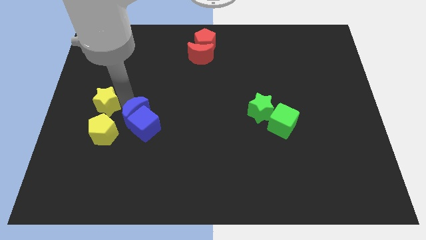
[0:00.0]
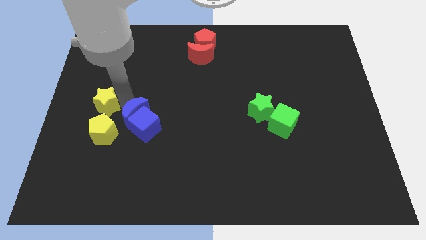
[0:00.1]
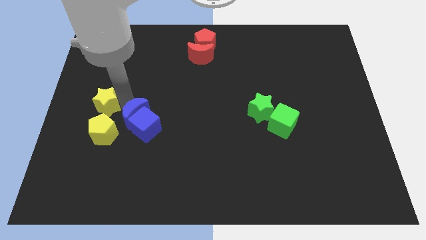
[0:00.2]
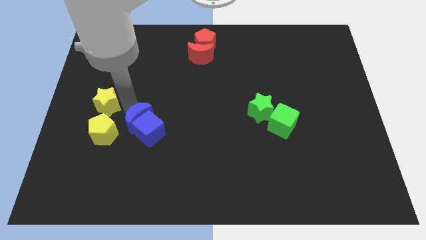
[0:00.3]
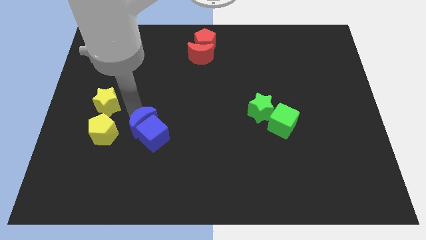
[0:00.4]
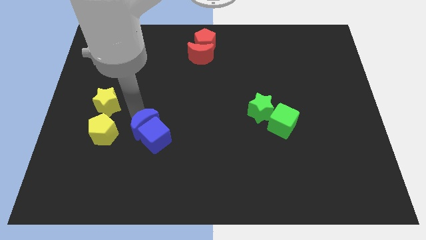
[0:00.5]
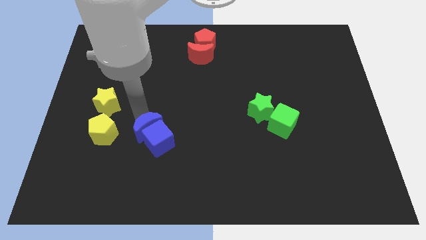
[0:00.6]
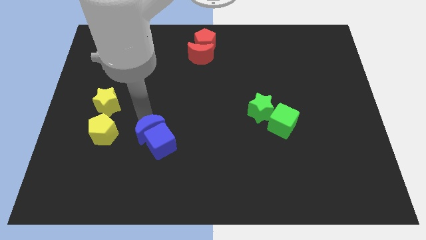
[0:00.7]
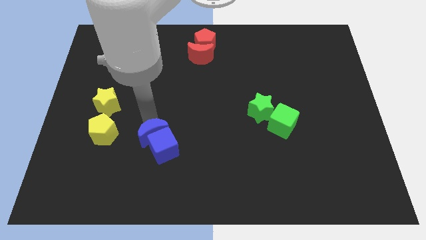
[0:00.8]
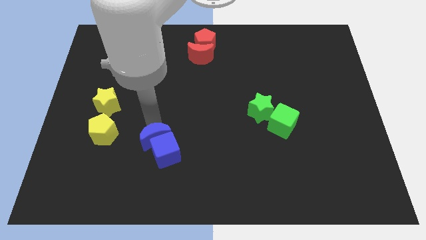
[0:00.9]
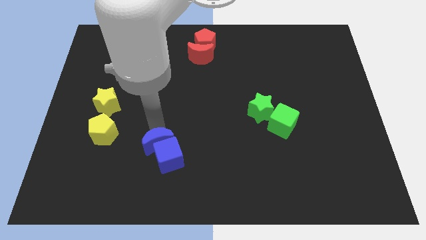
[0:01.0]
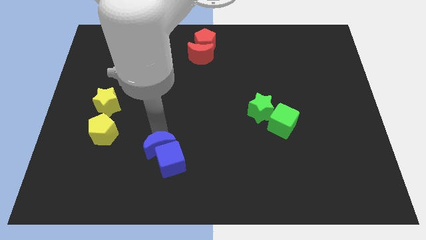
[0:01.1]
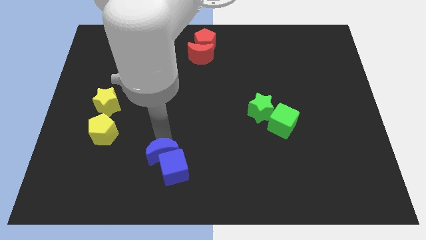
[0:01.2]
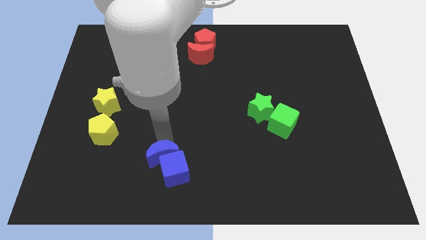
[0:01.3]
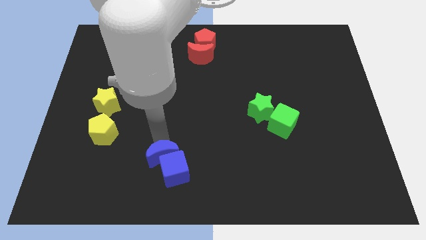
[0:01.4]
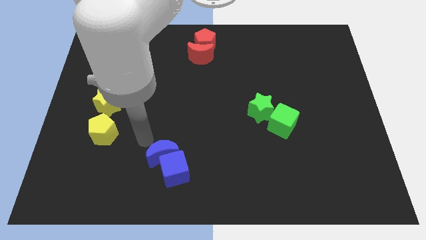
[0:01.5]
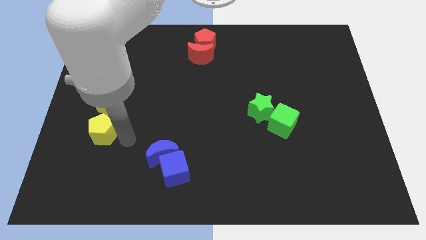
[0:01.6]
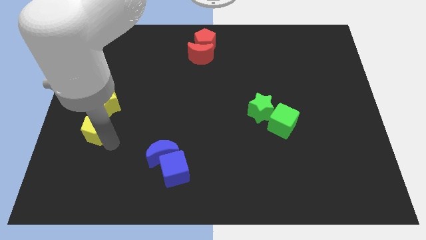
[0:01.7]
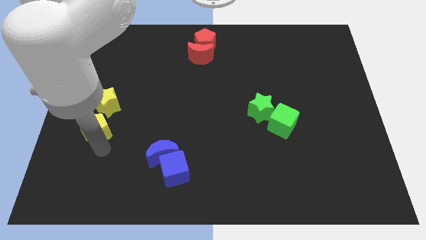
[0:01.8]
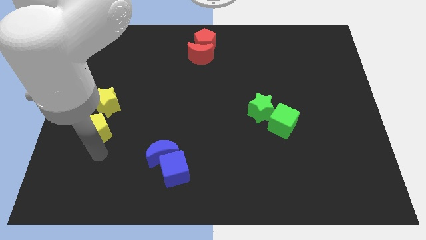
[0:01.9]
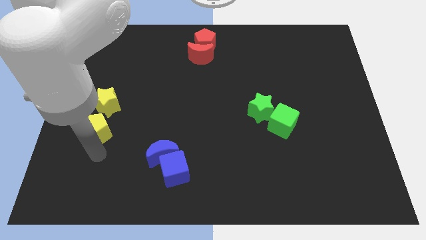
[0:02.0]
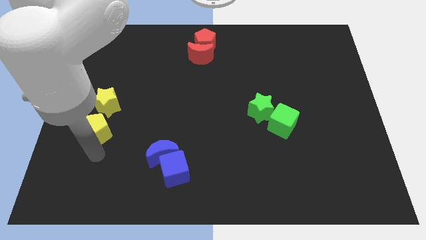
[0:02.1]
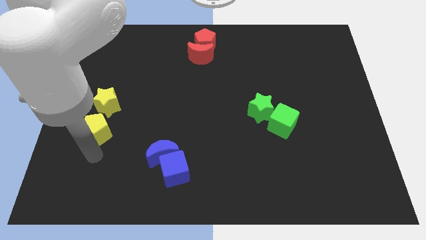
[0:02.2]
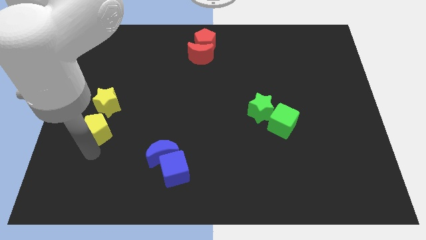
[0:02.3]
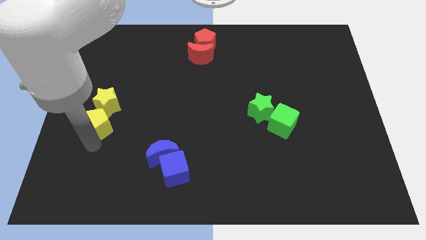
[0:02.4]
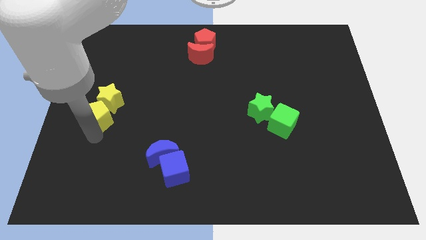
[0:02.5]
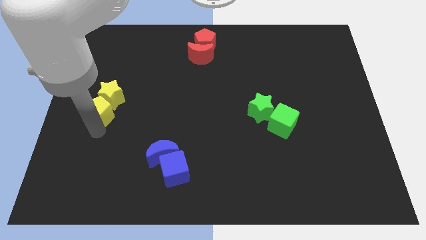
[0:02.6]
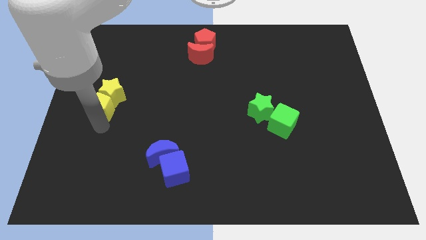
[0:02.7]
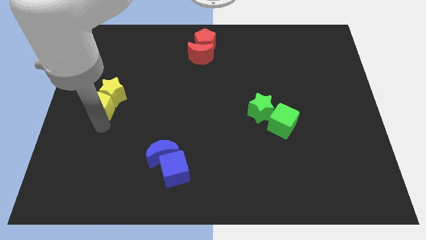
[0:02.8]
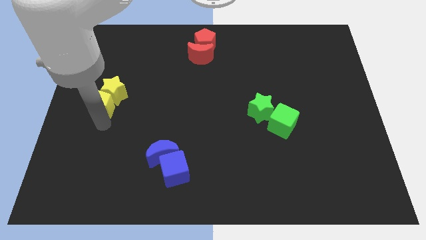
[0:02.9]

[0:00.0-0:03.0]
push the blue cube with blue crescent towards the bottom center of the board

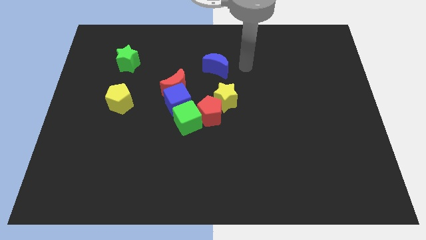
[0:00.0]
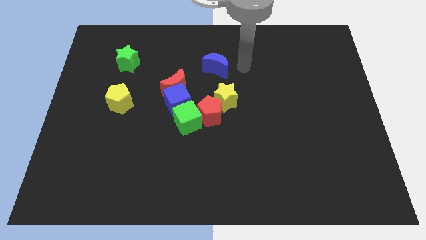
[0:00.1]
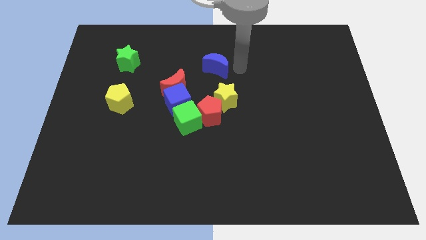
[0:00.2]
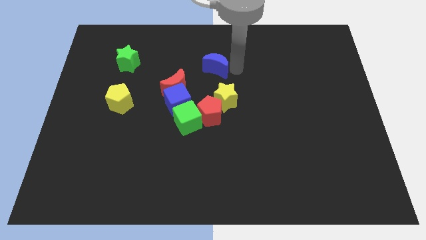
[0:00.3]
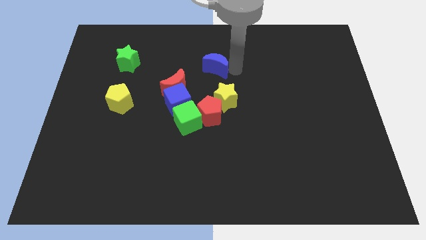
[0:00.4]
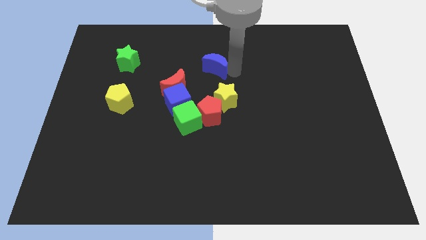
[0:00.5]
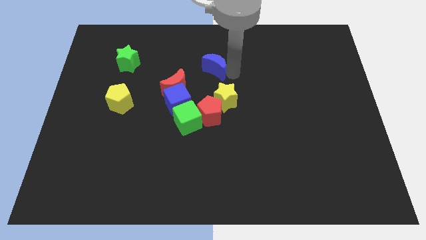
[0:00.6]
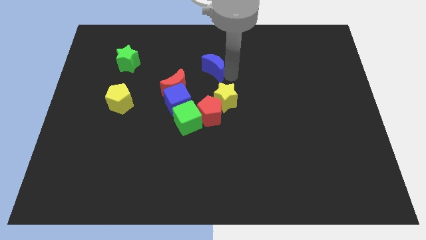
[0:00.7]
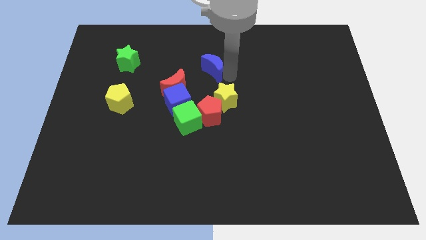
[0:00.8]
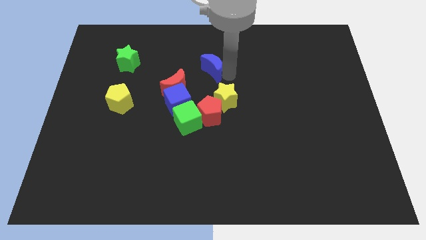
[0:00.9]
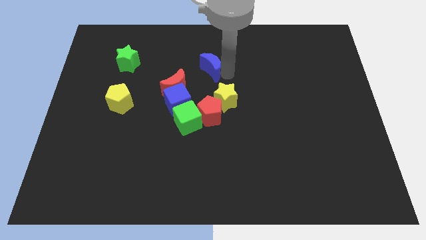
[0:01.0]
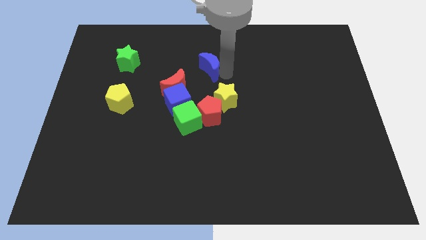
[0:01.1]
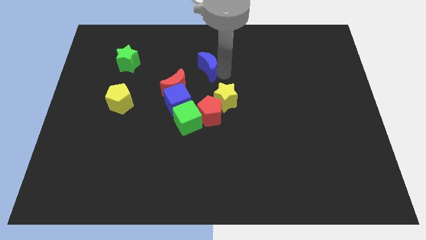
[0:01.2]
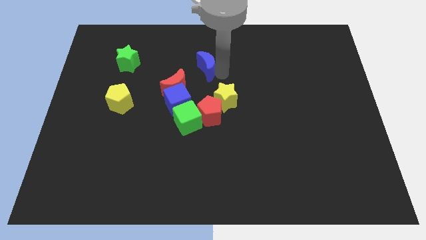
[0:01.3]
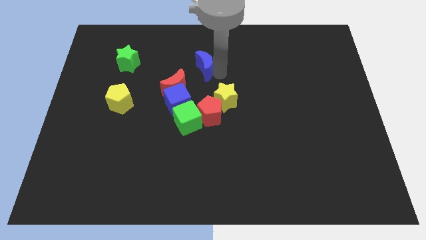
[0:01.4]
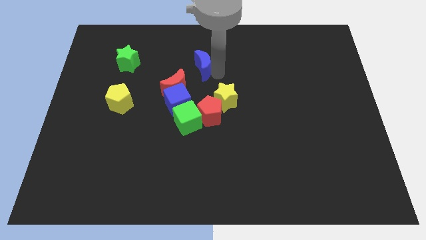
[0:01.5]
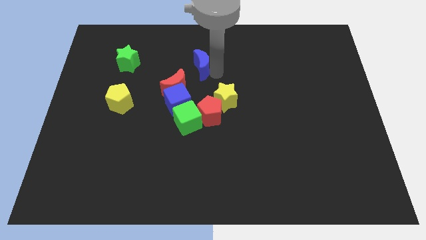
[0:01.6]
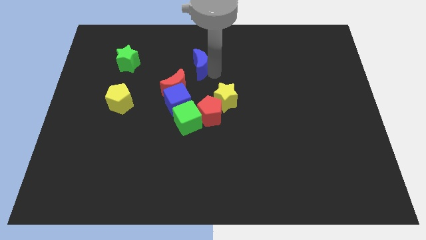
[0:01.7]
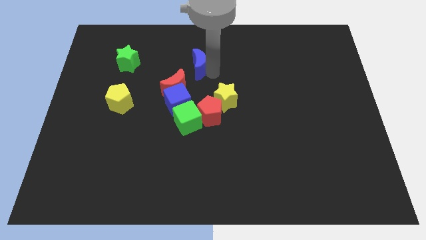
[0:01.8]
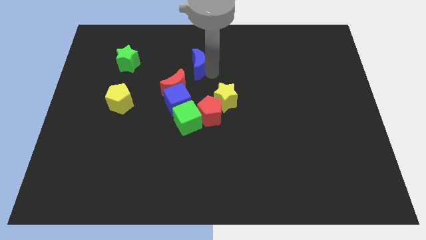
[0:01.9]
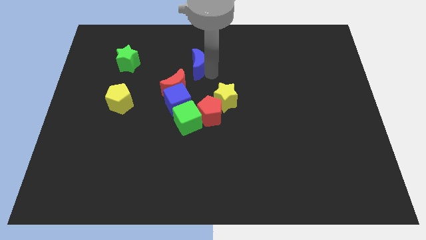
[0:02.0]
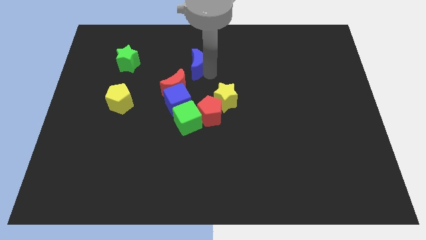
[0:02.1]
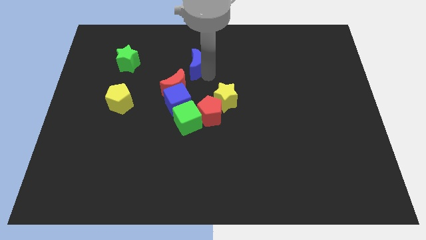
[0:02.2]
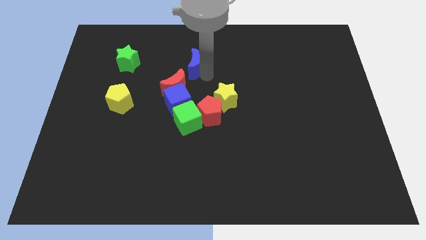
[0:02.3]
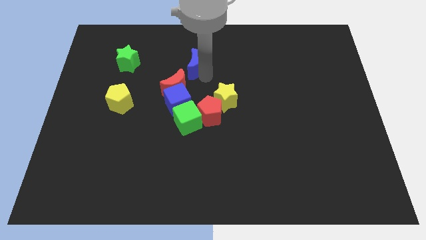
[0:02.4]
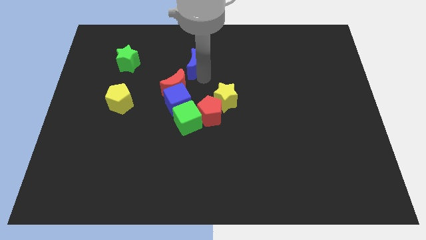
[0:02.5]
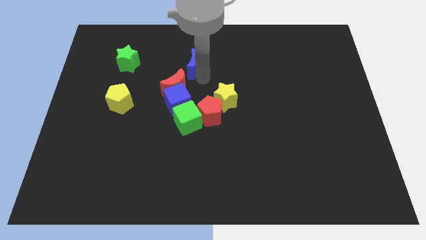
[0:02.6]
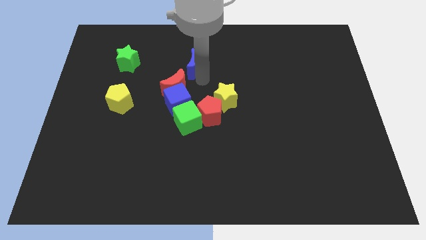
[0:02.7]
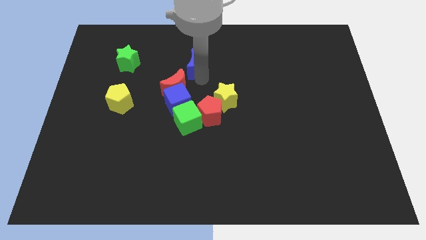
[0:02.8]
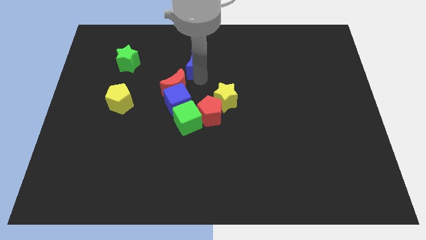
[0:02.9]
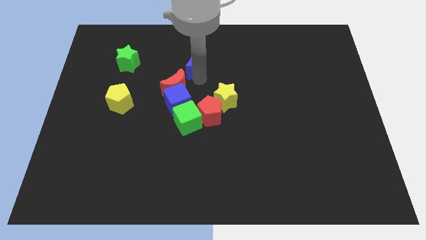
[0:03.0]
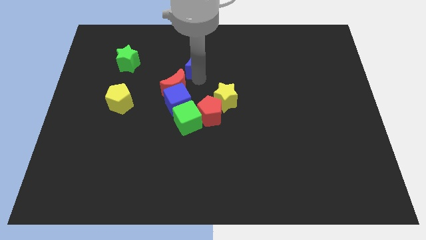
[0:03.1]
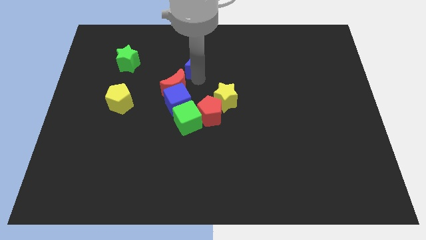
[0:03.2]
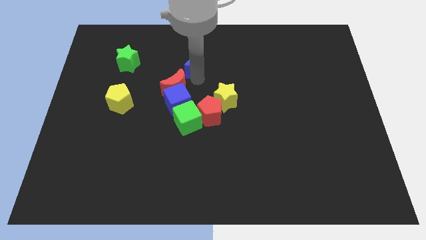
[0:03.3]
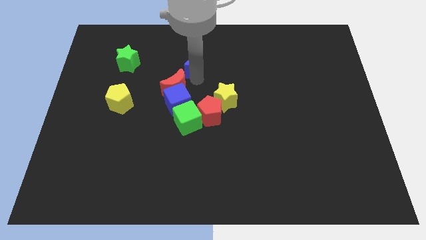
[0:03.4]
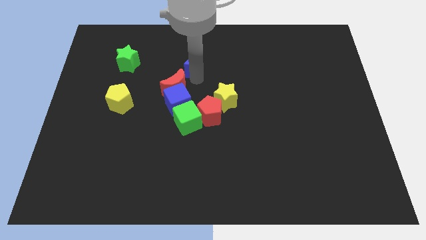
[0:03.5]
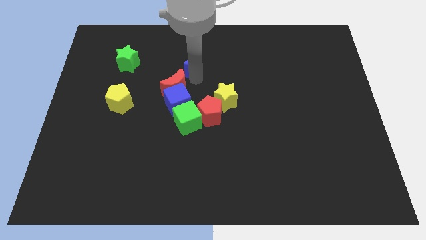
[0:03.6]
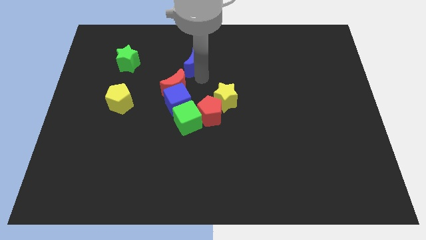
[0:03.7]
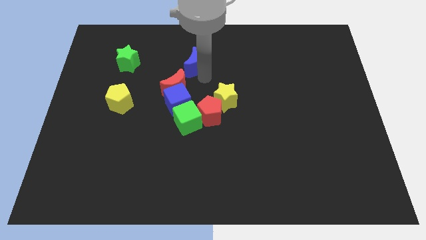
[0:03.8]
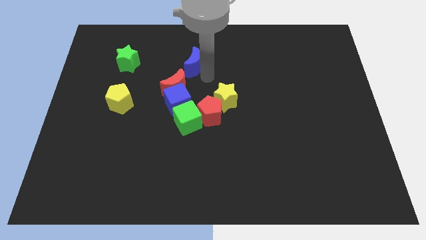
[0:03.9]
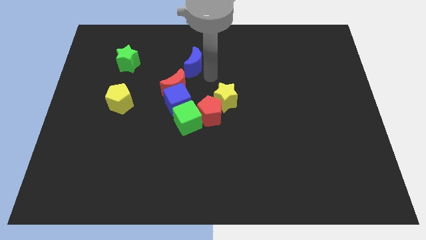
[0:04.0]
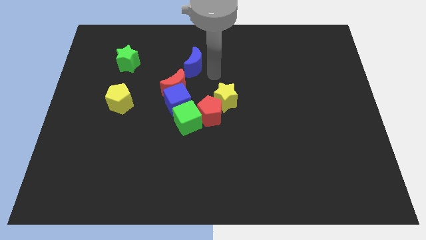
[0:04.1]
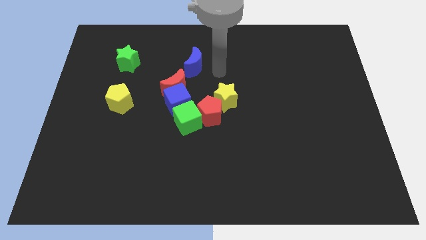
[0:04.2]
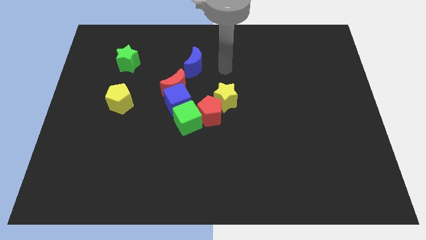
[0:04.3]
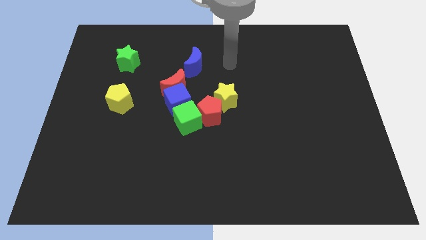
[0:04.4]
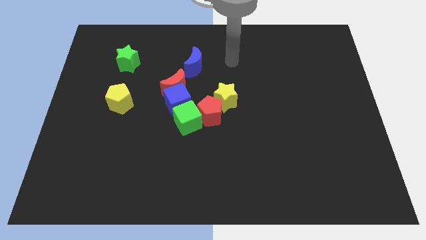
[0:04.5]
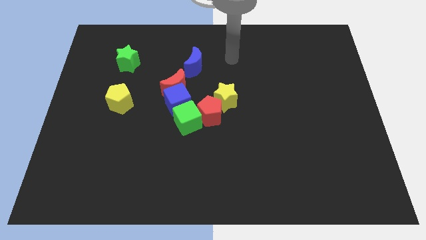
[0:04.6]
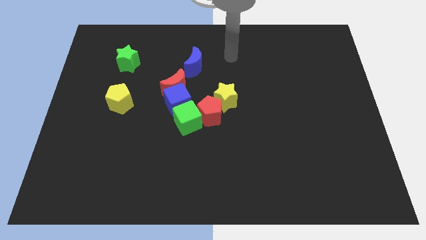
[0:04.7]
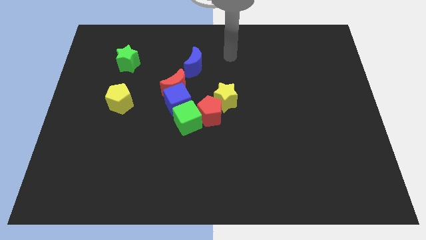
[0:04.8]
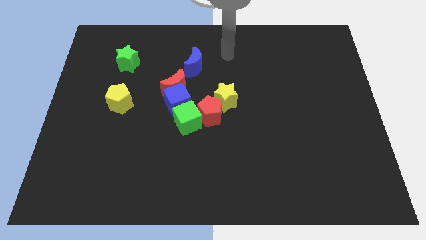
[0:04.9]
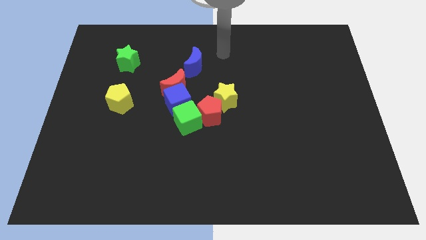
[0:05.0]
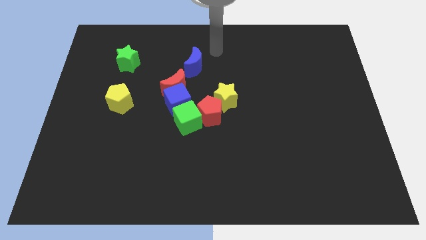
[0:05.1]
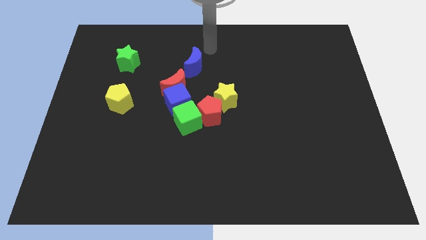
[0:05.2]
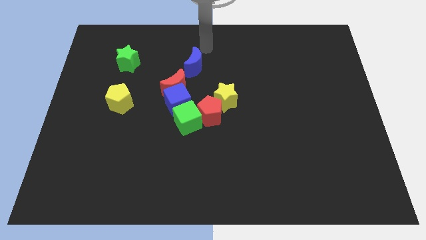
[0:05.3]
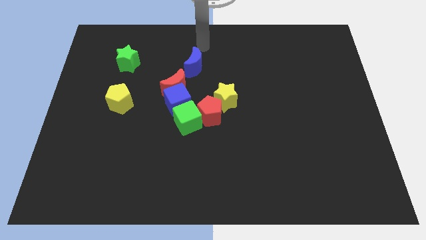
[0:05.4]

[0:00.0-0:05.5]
move the blue crescent to the top right of the red crescent

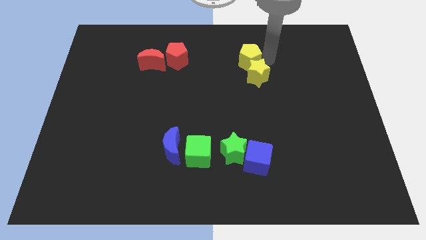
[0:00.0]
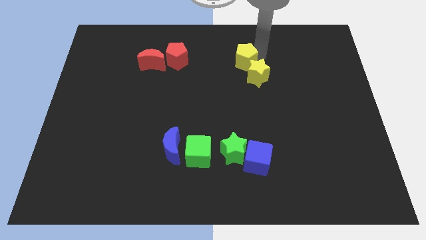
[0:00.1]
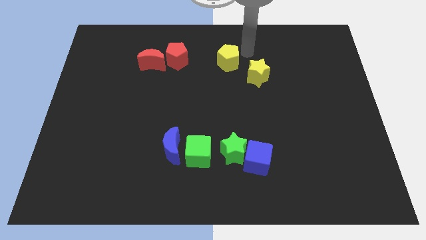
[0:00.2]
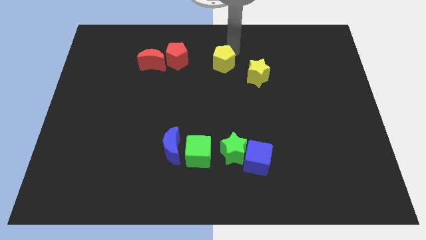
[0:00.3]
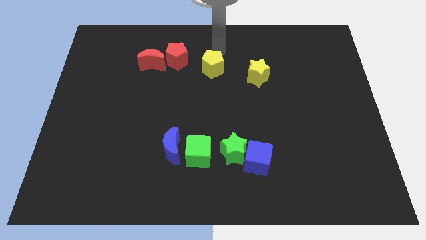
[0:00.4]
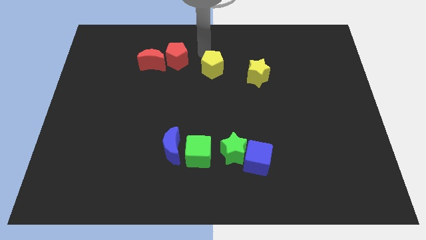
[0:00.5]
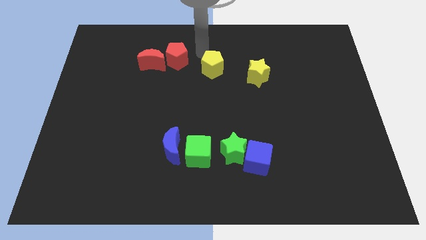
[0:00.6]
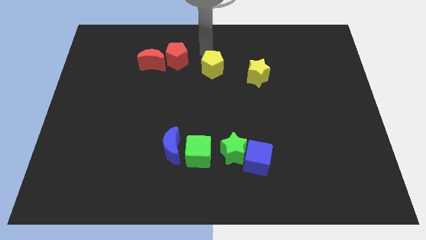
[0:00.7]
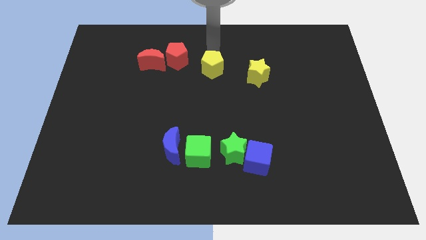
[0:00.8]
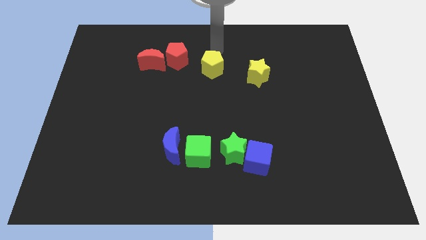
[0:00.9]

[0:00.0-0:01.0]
place the yellow pentagon in between the yellow star and red pentagon
